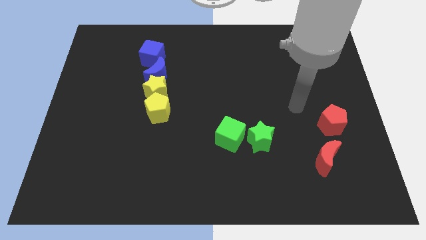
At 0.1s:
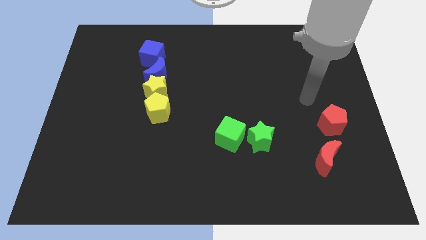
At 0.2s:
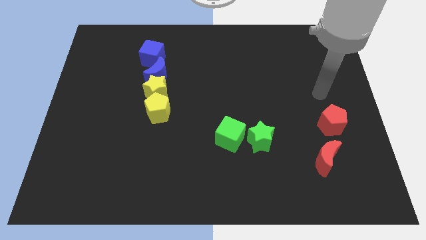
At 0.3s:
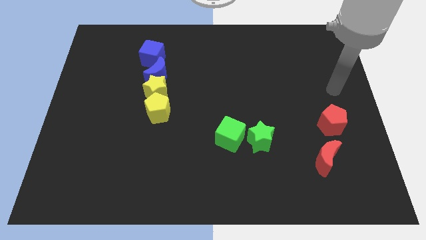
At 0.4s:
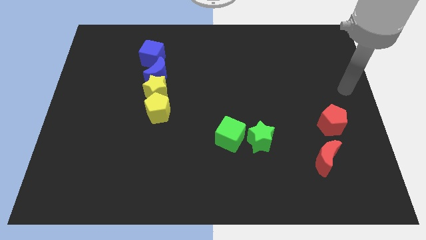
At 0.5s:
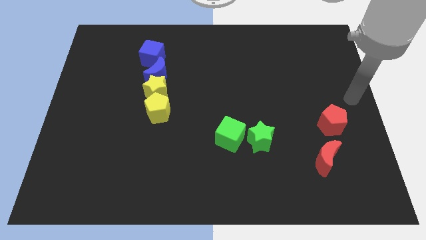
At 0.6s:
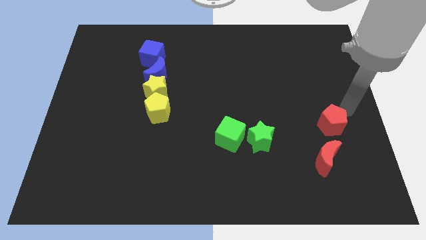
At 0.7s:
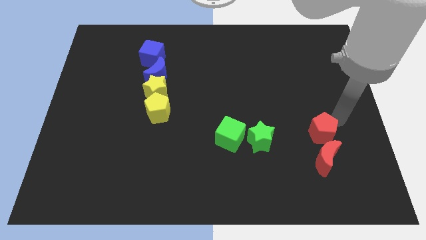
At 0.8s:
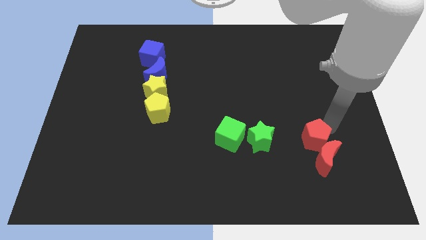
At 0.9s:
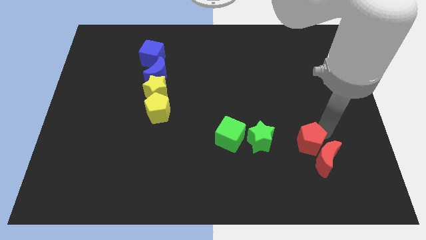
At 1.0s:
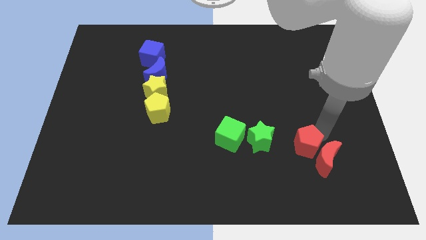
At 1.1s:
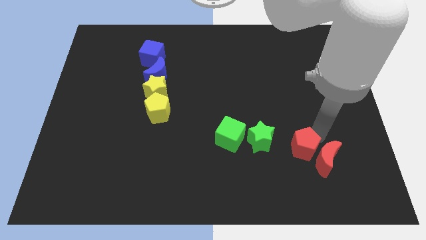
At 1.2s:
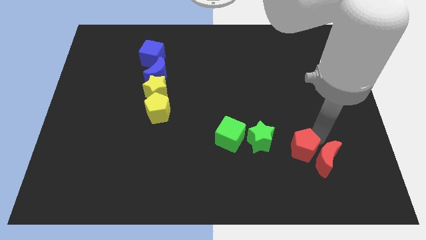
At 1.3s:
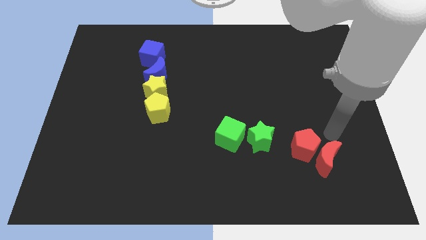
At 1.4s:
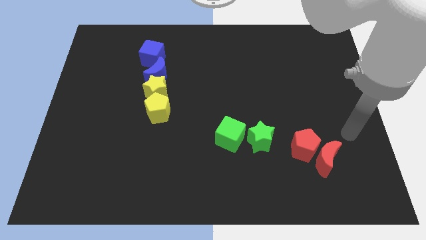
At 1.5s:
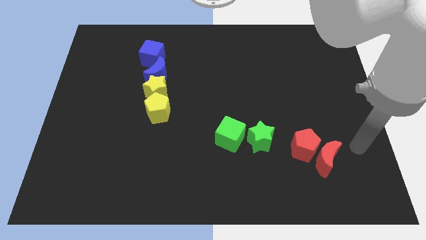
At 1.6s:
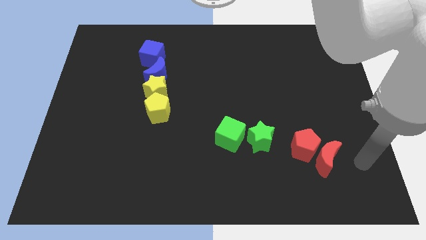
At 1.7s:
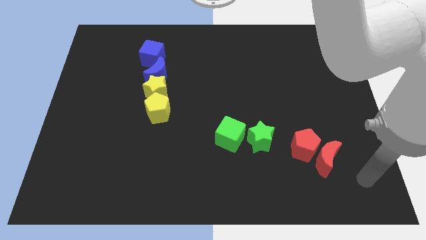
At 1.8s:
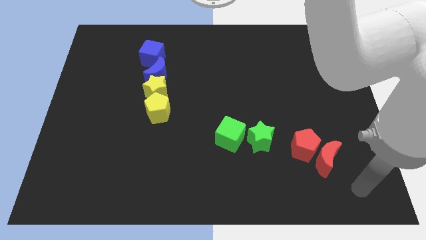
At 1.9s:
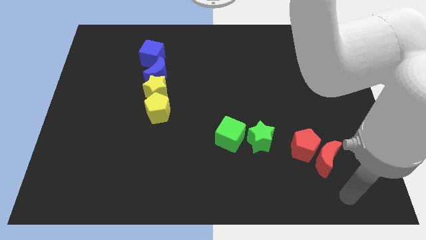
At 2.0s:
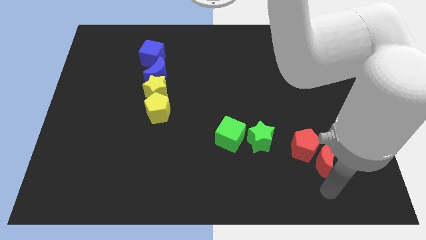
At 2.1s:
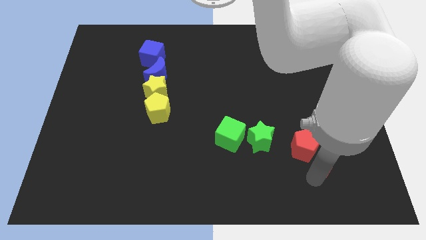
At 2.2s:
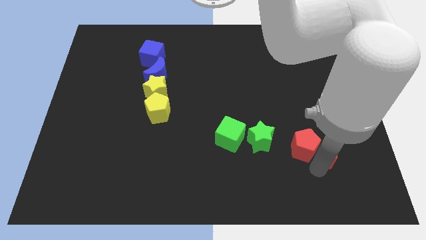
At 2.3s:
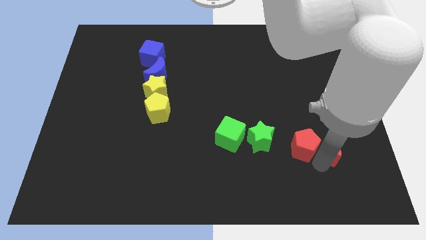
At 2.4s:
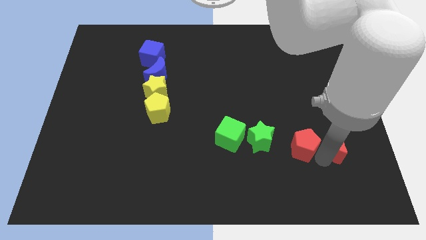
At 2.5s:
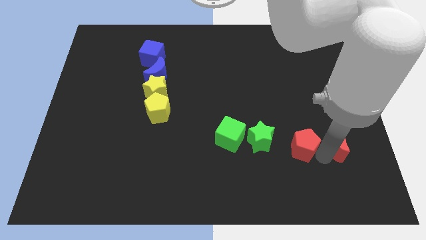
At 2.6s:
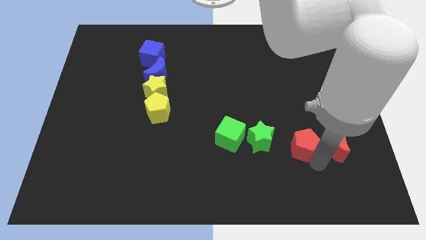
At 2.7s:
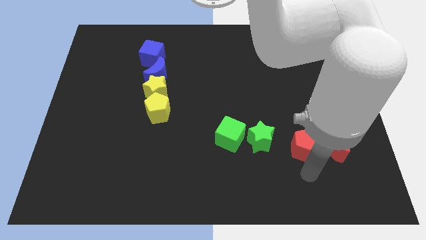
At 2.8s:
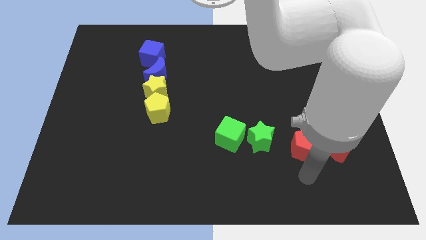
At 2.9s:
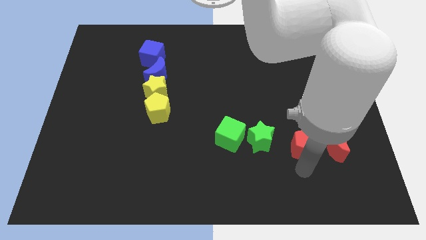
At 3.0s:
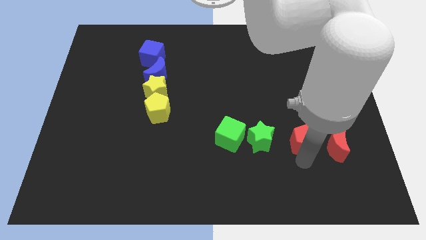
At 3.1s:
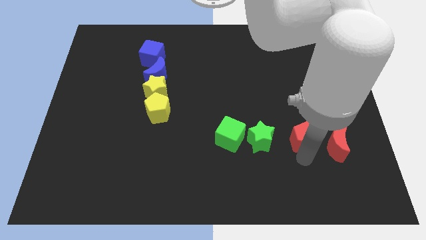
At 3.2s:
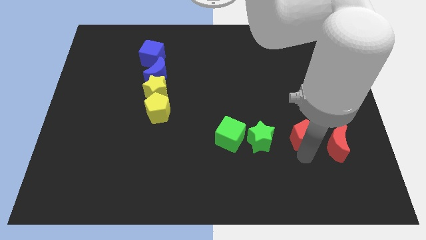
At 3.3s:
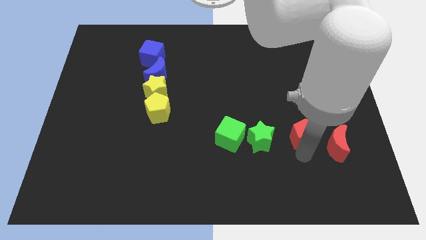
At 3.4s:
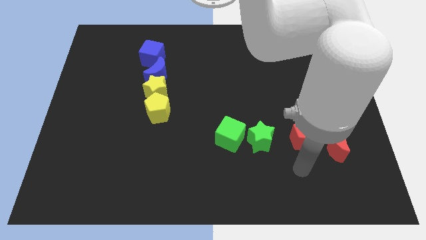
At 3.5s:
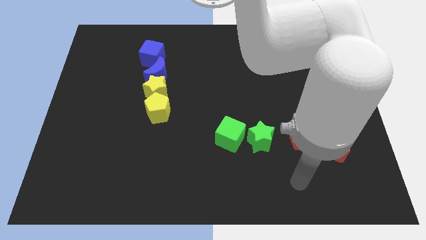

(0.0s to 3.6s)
place the red pentagon to the left side of the red crescent

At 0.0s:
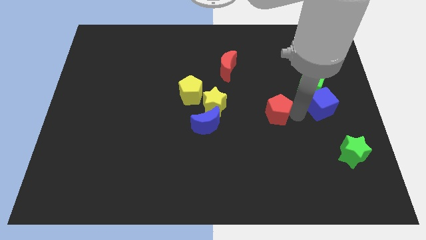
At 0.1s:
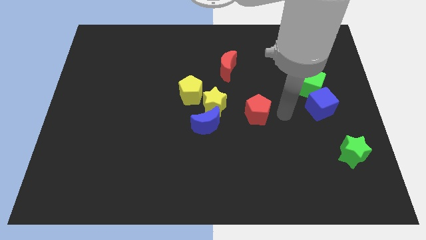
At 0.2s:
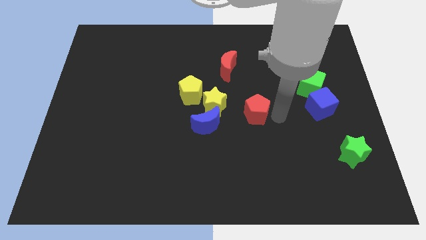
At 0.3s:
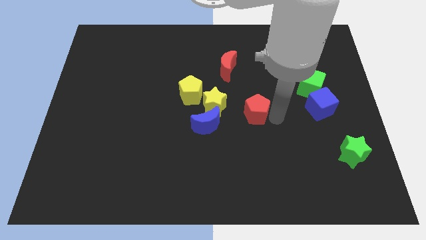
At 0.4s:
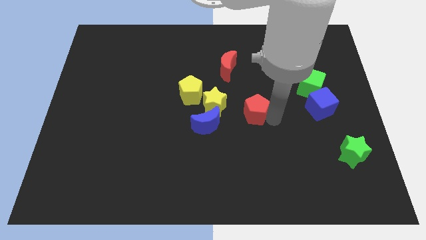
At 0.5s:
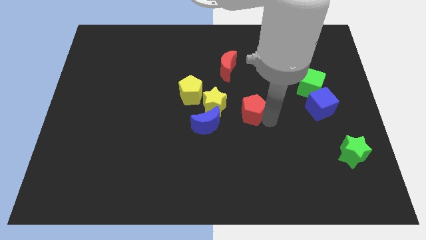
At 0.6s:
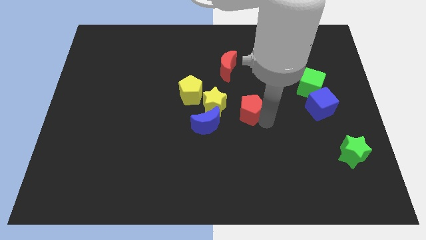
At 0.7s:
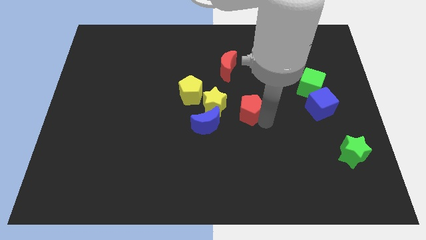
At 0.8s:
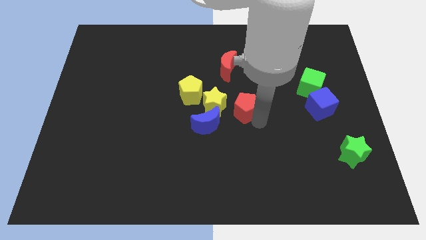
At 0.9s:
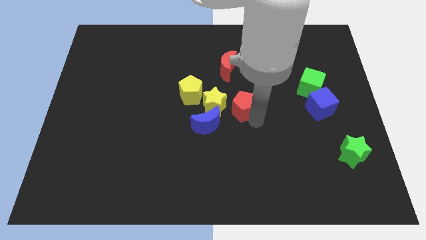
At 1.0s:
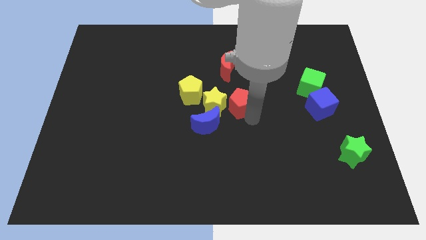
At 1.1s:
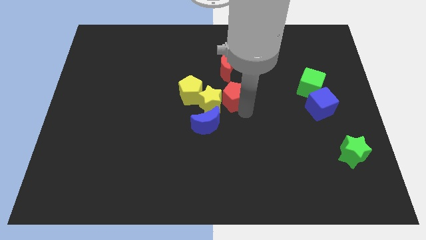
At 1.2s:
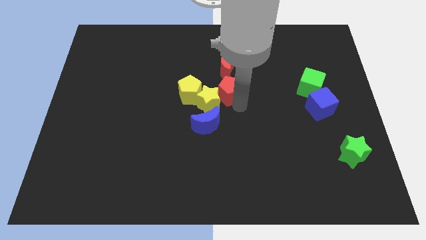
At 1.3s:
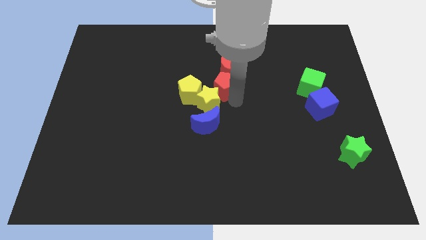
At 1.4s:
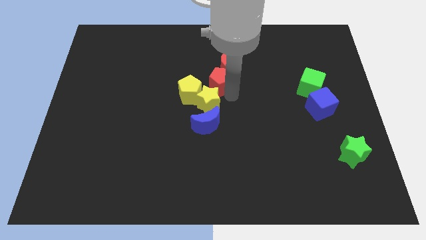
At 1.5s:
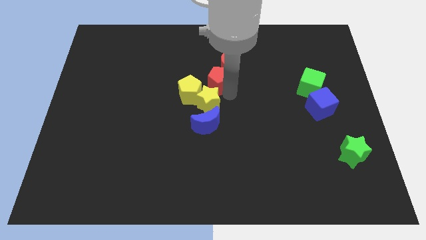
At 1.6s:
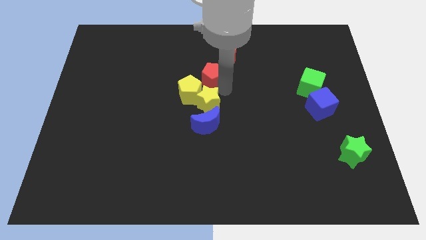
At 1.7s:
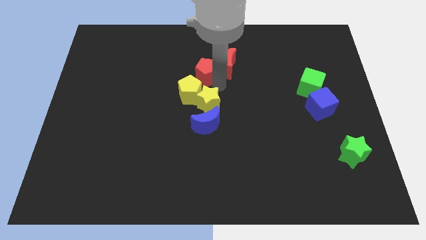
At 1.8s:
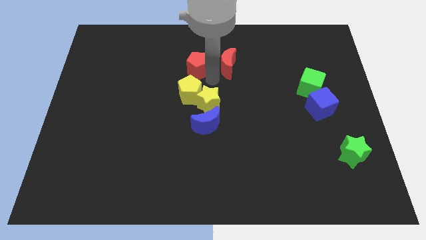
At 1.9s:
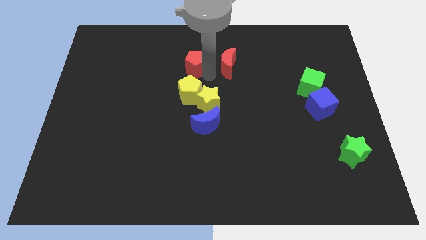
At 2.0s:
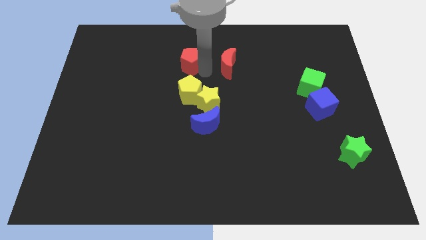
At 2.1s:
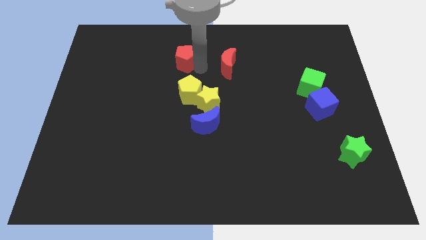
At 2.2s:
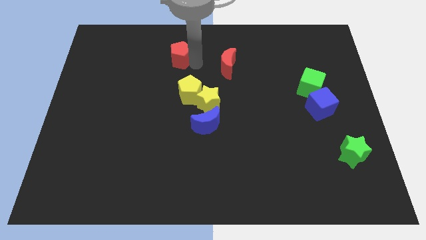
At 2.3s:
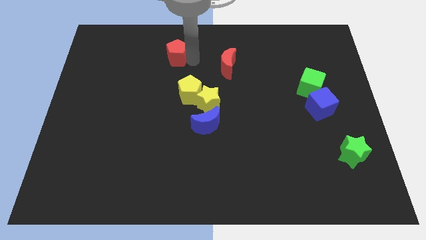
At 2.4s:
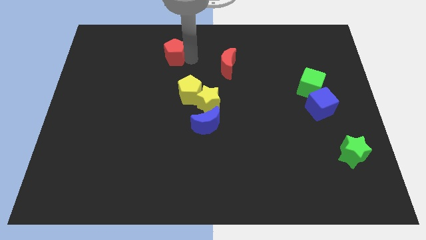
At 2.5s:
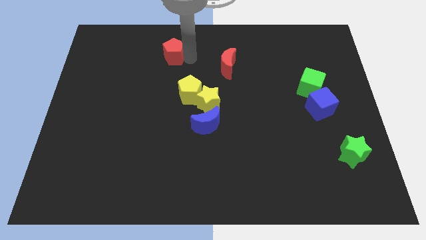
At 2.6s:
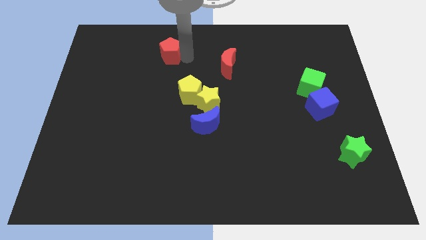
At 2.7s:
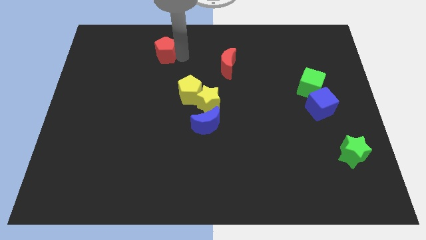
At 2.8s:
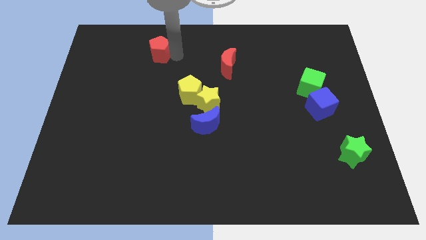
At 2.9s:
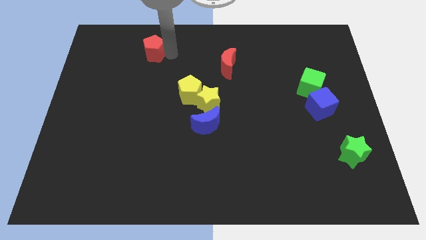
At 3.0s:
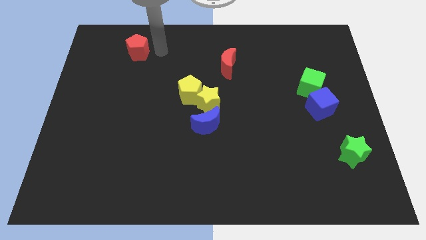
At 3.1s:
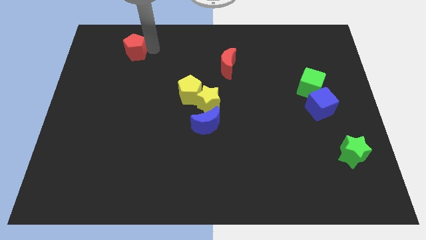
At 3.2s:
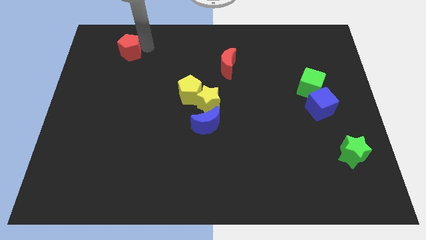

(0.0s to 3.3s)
slide the red pentagon diagonally top left to the yellow pentagon

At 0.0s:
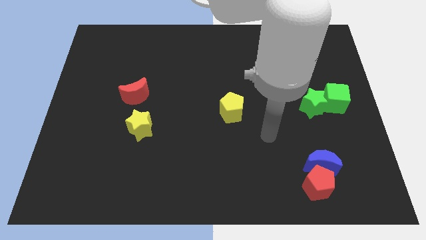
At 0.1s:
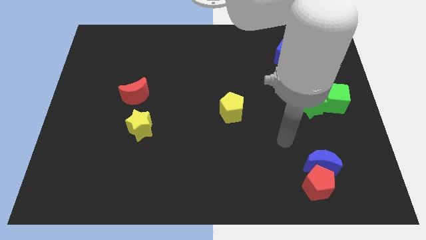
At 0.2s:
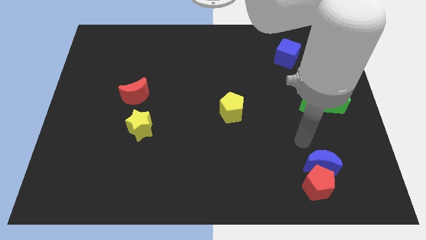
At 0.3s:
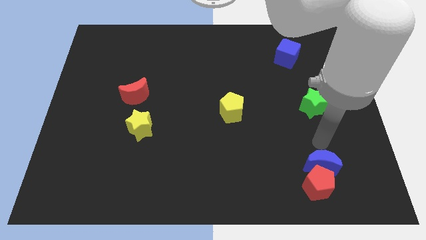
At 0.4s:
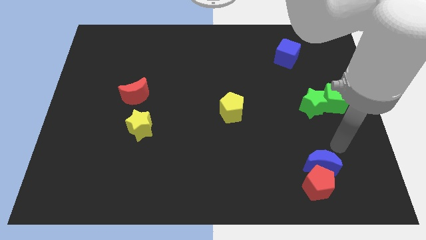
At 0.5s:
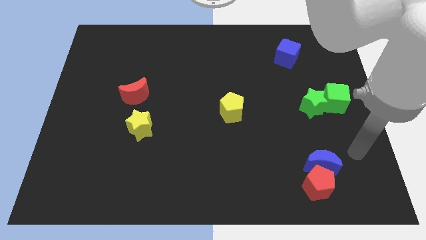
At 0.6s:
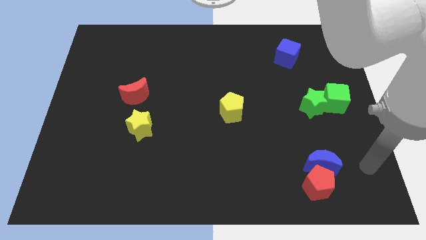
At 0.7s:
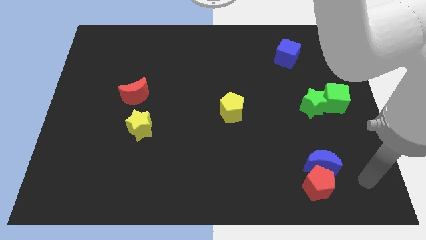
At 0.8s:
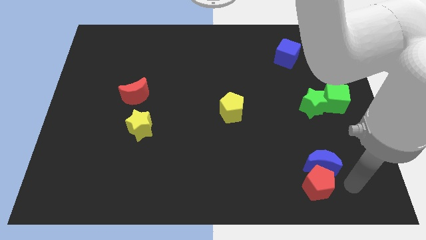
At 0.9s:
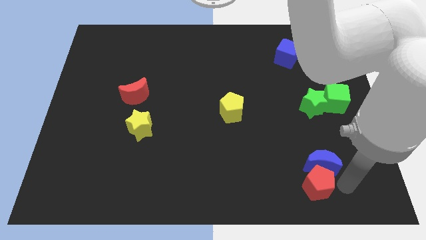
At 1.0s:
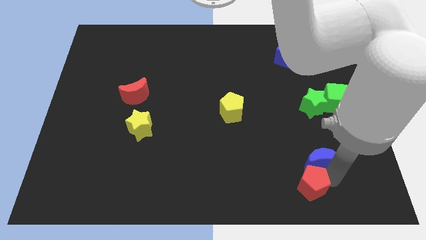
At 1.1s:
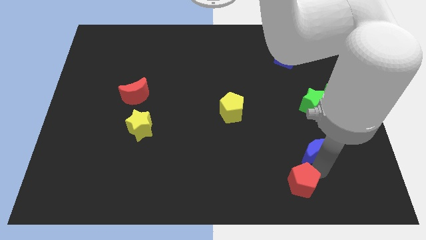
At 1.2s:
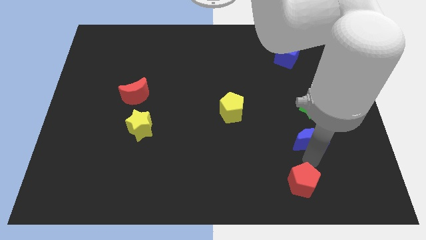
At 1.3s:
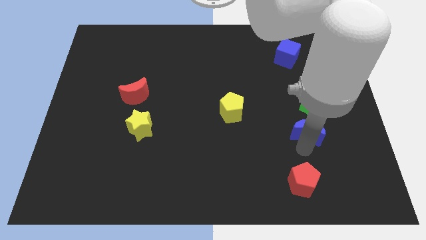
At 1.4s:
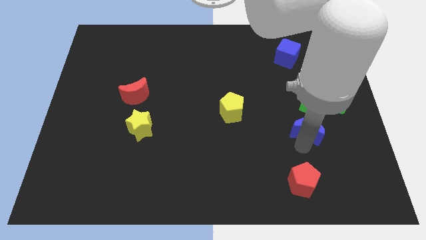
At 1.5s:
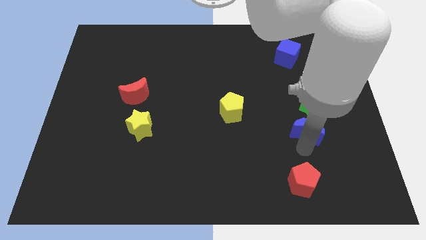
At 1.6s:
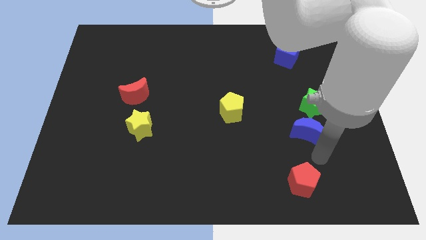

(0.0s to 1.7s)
separate the red pentagon and blue crescent

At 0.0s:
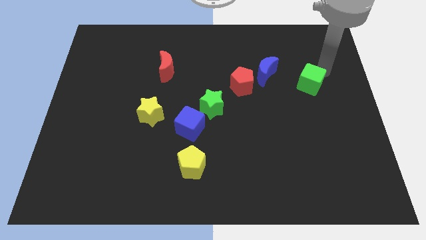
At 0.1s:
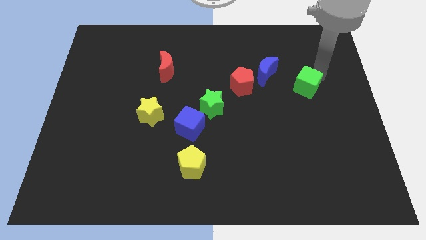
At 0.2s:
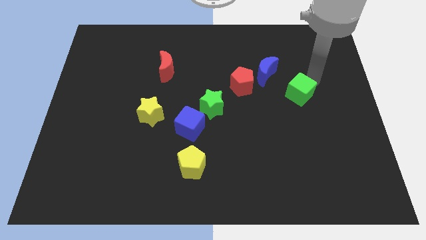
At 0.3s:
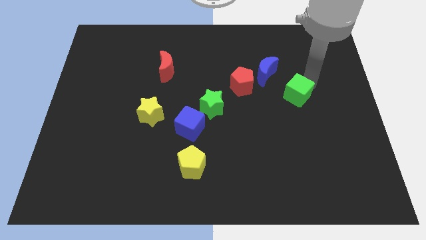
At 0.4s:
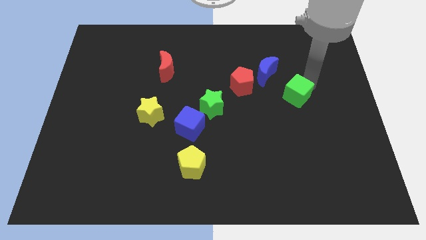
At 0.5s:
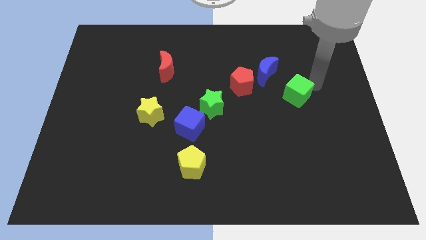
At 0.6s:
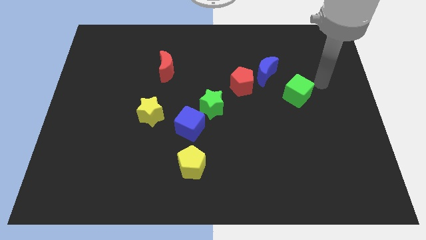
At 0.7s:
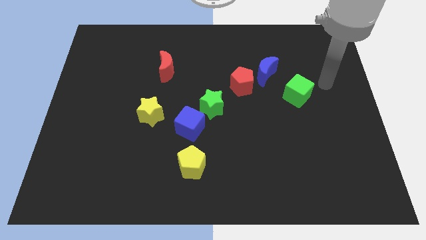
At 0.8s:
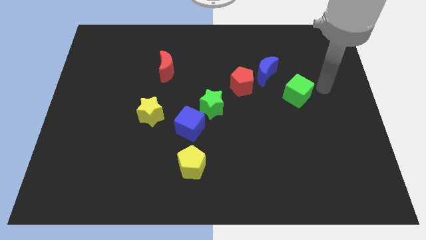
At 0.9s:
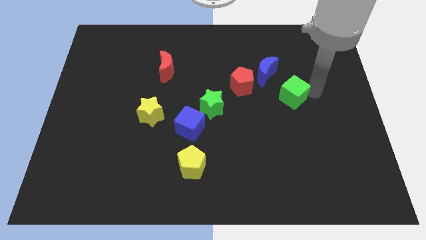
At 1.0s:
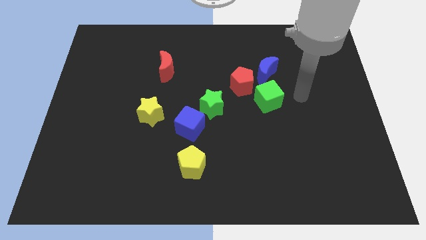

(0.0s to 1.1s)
move green cube to the bottom of blue moon
